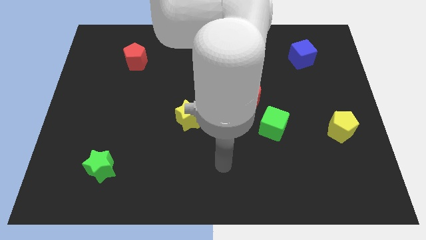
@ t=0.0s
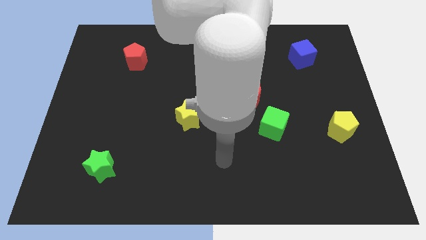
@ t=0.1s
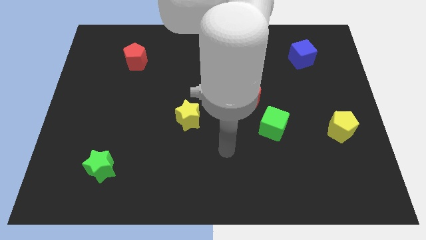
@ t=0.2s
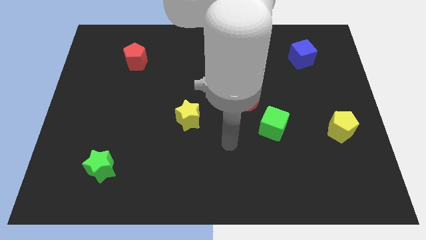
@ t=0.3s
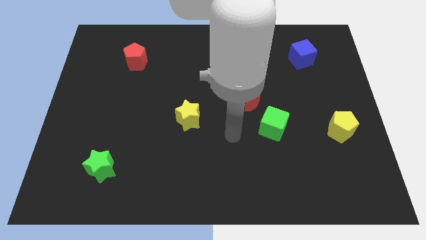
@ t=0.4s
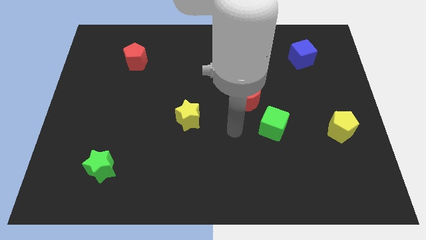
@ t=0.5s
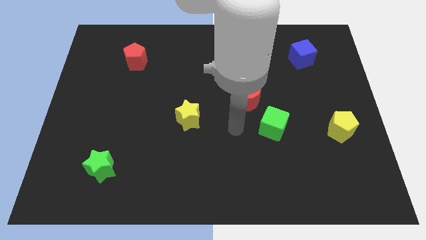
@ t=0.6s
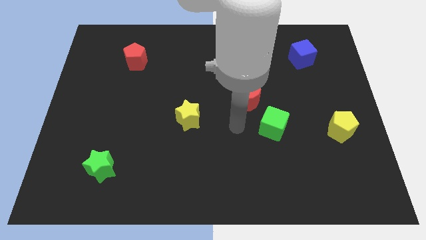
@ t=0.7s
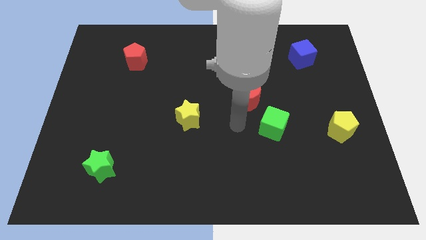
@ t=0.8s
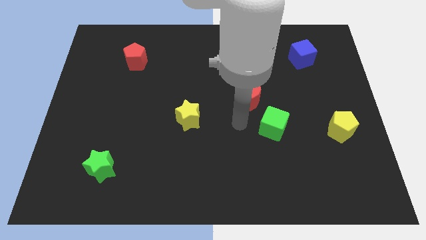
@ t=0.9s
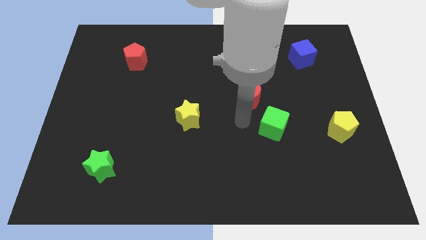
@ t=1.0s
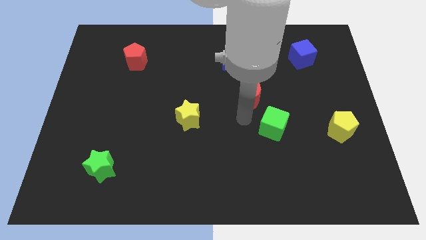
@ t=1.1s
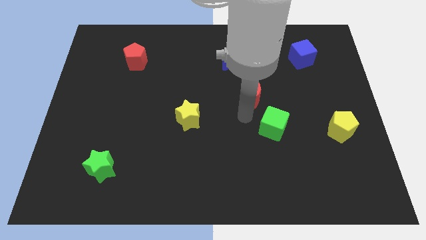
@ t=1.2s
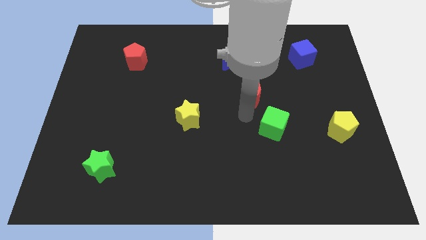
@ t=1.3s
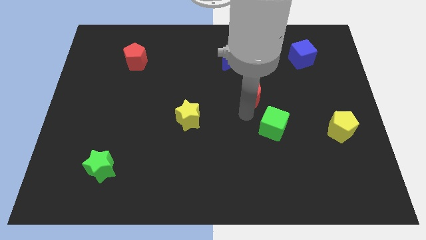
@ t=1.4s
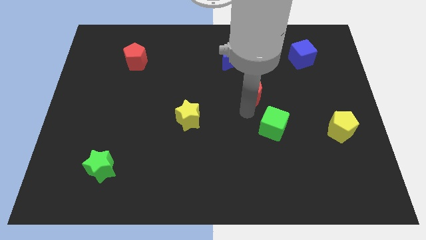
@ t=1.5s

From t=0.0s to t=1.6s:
tap the bottom side of the red crescent

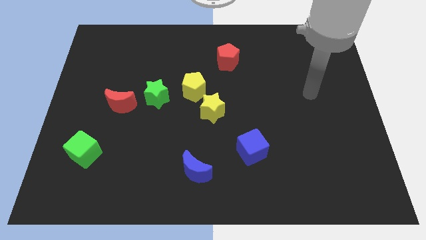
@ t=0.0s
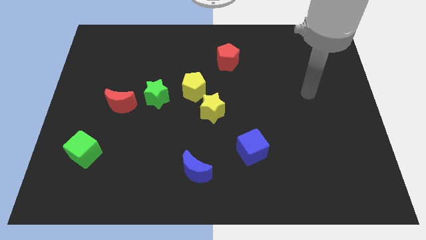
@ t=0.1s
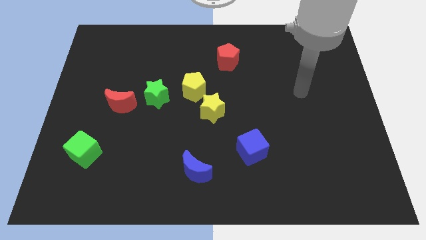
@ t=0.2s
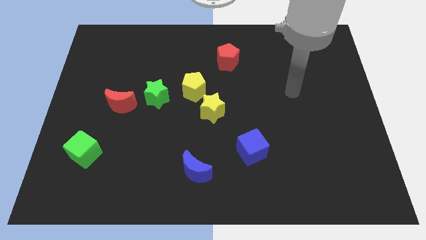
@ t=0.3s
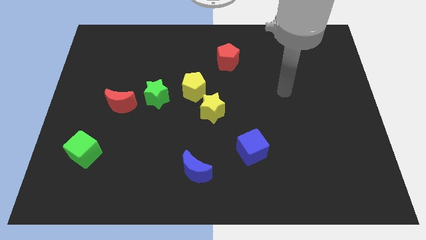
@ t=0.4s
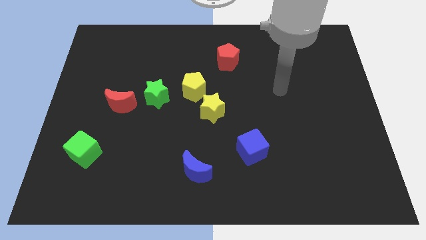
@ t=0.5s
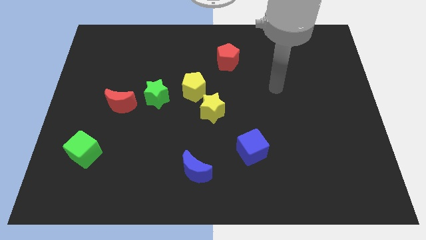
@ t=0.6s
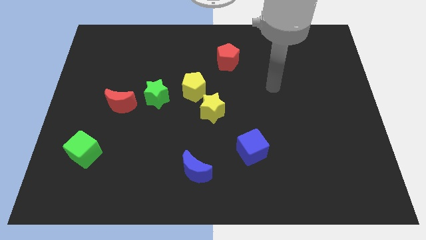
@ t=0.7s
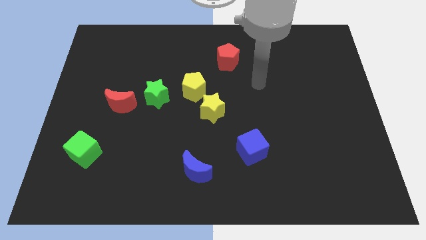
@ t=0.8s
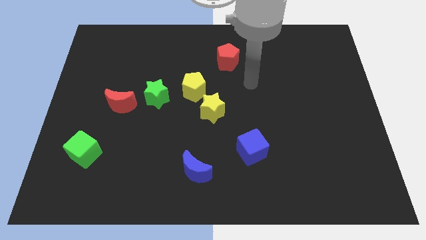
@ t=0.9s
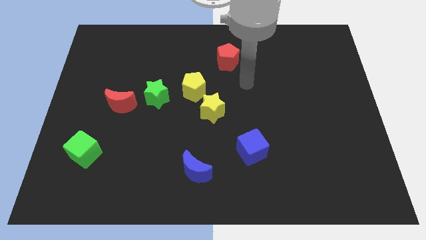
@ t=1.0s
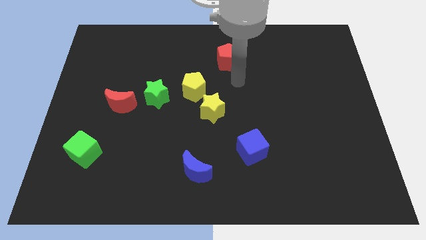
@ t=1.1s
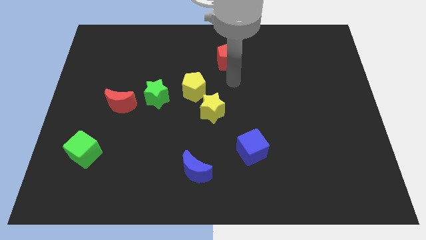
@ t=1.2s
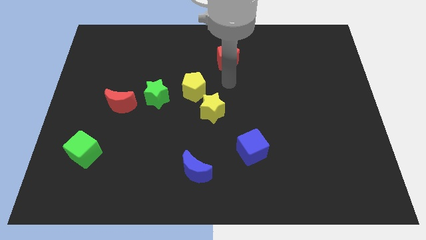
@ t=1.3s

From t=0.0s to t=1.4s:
move your arm to the bottom side of the red pentagon

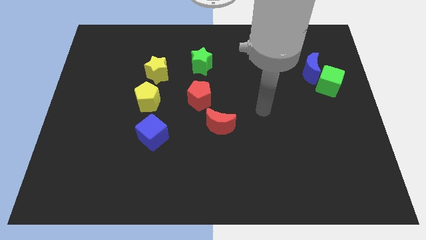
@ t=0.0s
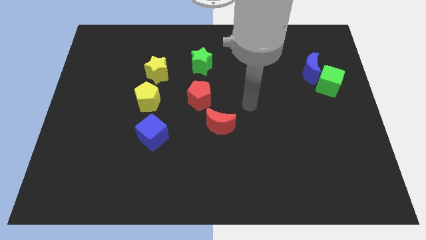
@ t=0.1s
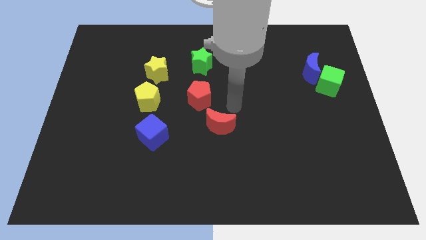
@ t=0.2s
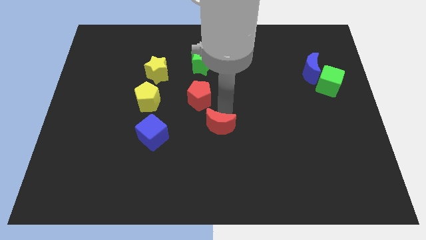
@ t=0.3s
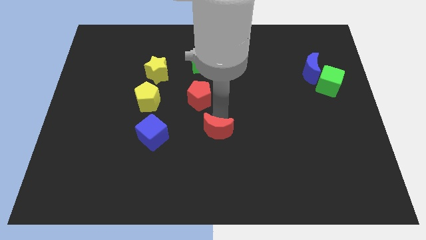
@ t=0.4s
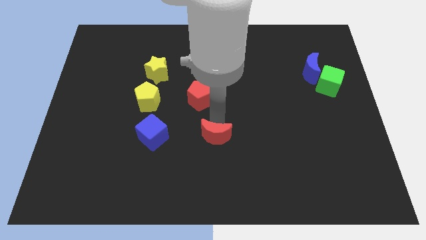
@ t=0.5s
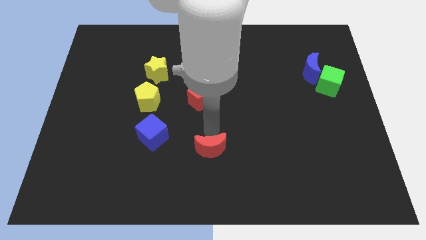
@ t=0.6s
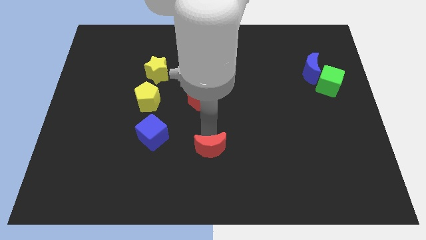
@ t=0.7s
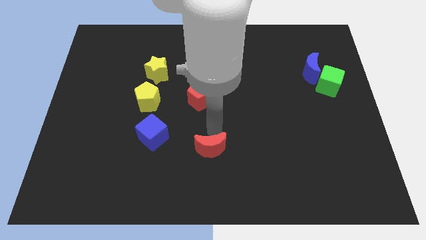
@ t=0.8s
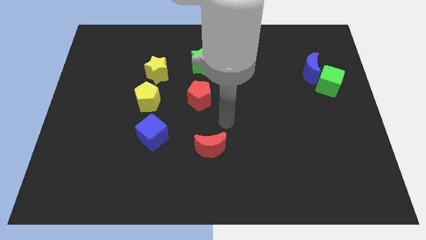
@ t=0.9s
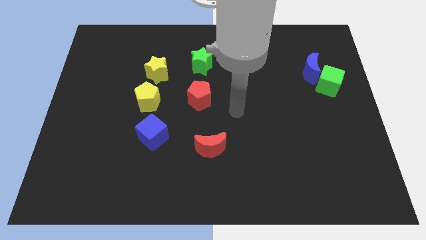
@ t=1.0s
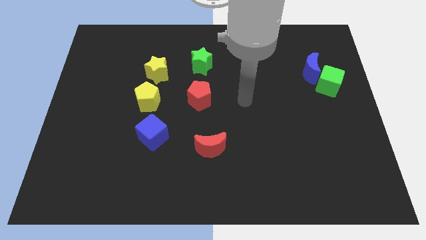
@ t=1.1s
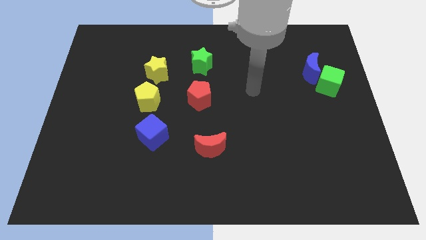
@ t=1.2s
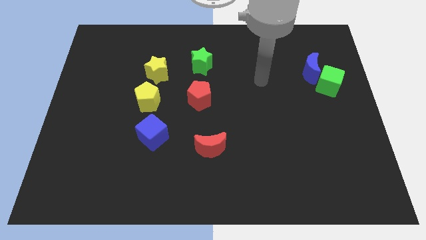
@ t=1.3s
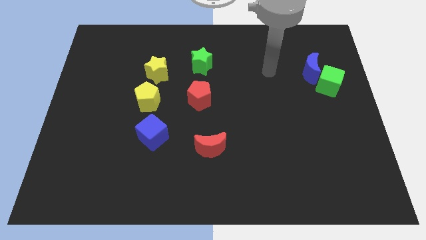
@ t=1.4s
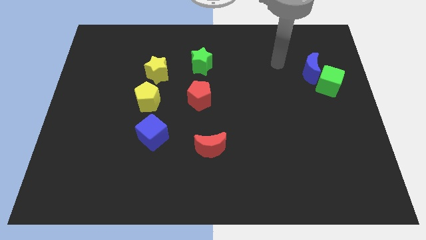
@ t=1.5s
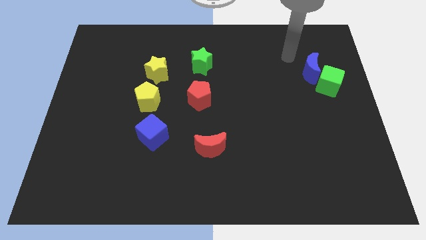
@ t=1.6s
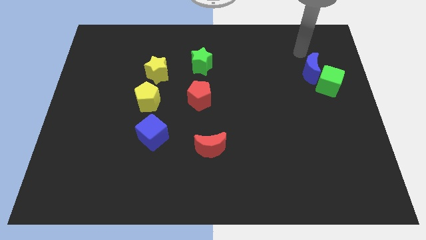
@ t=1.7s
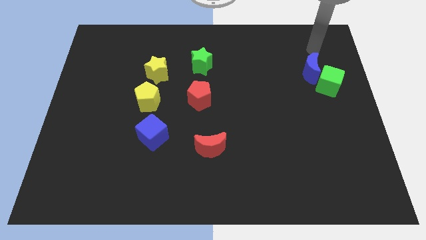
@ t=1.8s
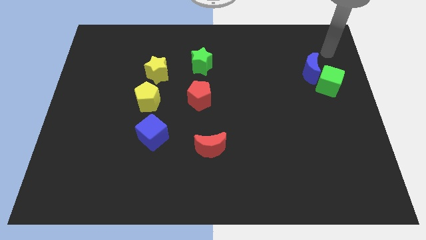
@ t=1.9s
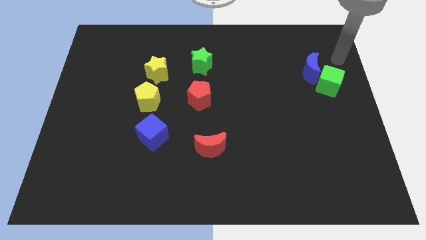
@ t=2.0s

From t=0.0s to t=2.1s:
push the red moon towards the red pentagon

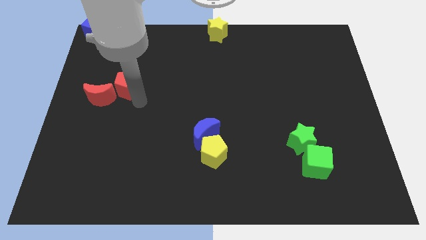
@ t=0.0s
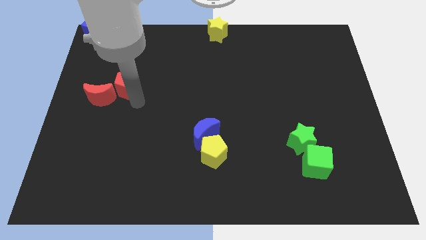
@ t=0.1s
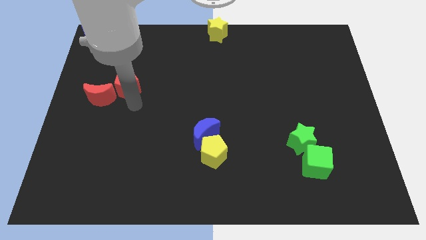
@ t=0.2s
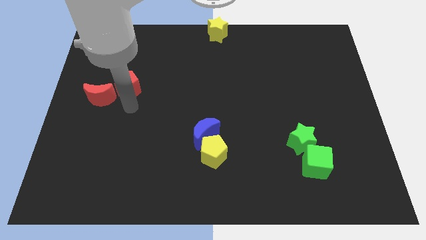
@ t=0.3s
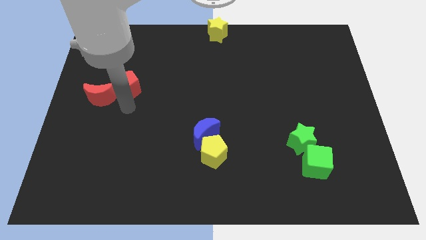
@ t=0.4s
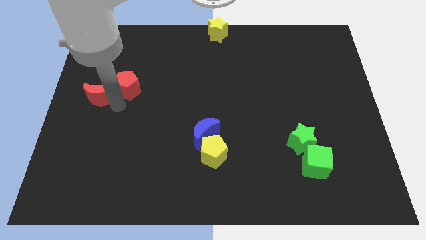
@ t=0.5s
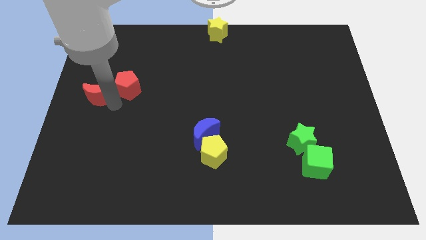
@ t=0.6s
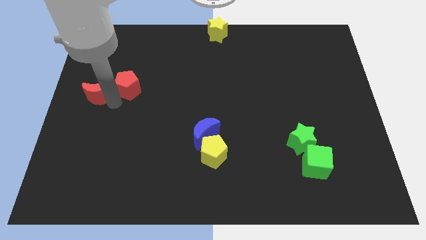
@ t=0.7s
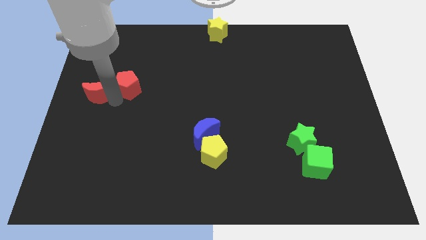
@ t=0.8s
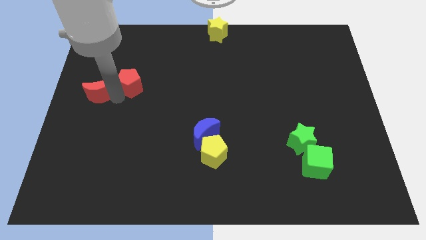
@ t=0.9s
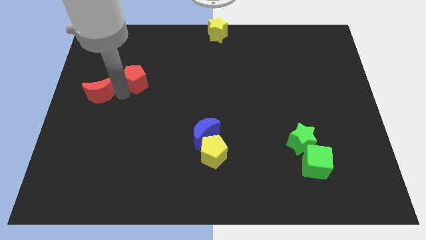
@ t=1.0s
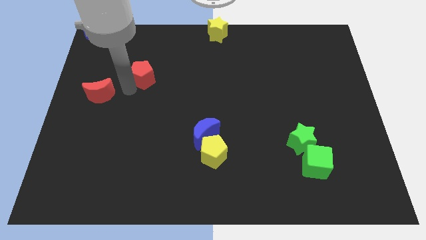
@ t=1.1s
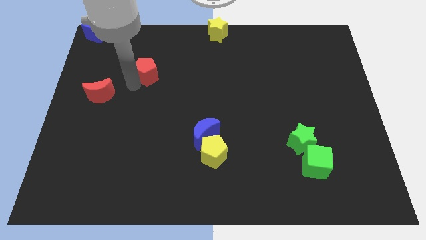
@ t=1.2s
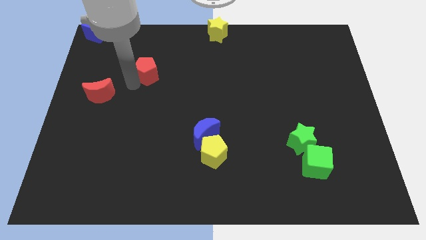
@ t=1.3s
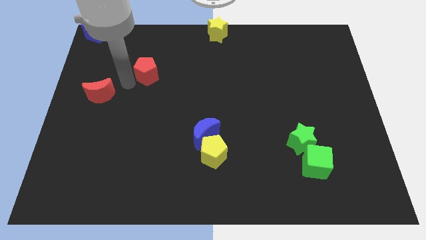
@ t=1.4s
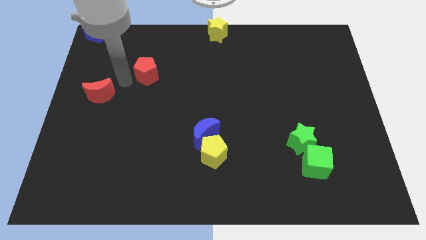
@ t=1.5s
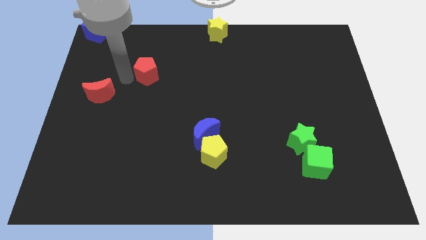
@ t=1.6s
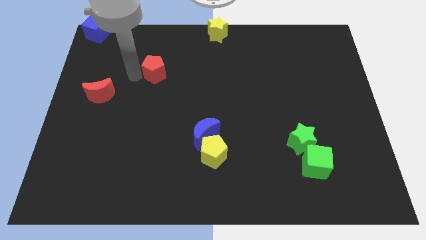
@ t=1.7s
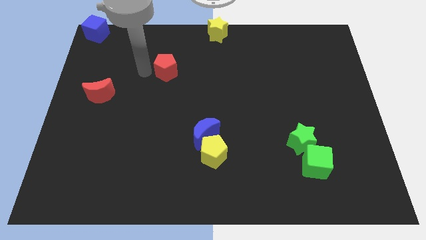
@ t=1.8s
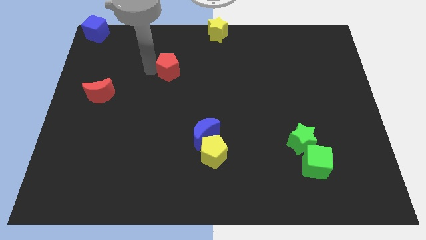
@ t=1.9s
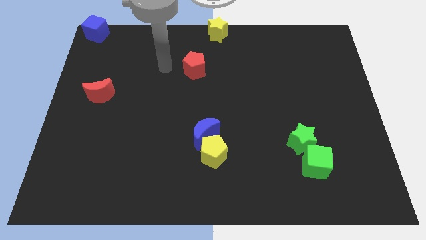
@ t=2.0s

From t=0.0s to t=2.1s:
separate the red pentagon from the red crescent

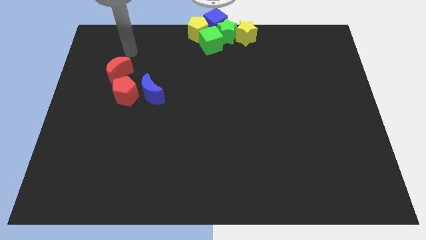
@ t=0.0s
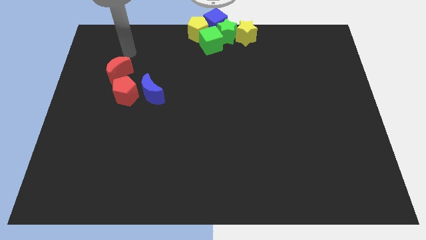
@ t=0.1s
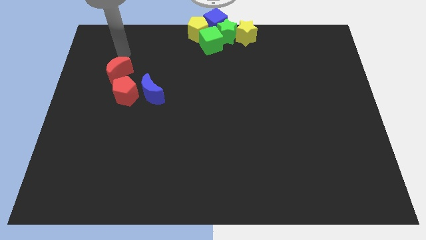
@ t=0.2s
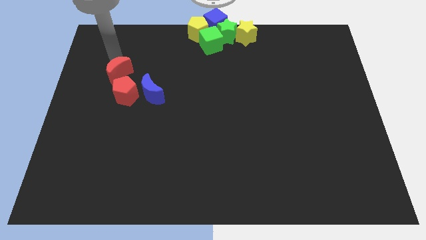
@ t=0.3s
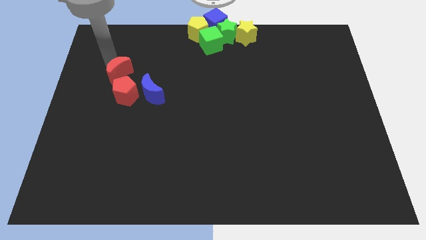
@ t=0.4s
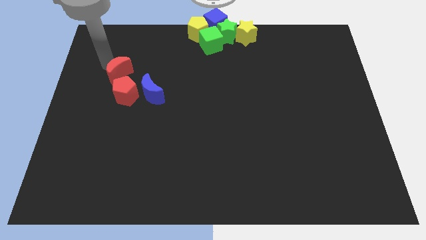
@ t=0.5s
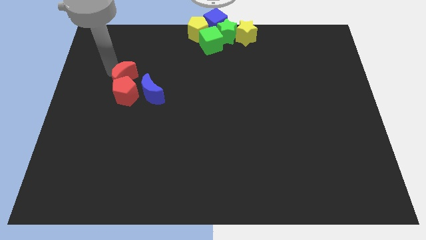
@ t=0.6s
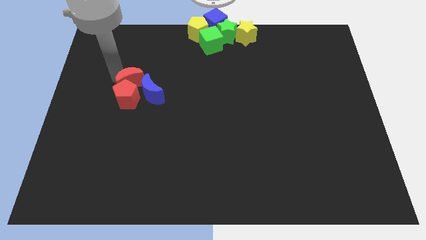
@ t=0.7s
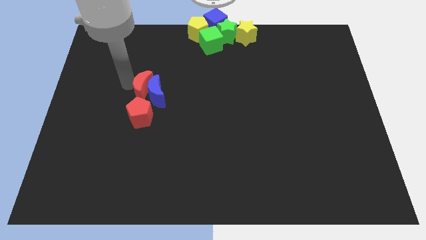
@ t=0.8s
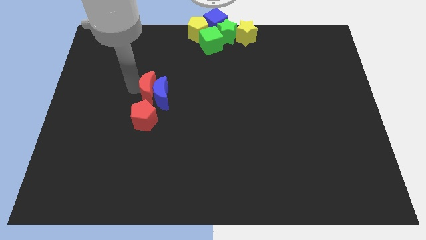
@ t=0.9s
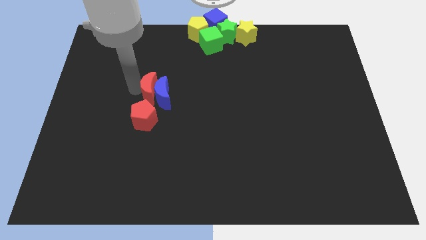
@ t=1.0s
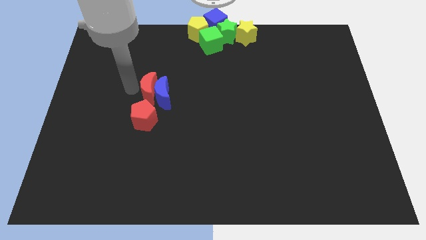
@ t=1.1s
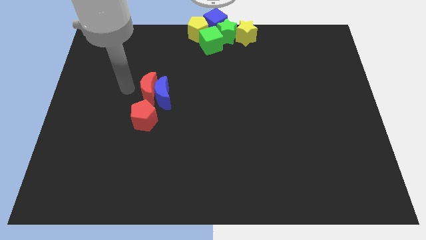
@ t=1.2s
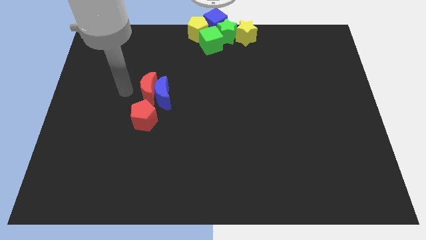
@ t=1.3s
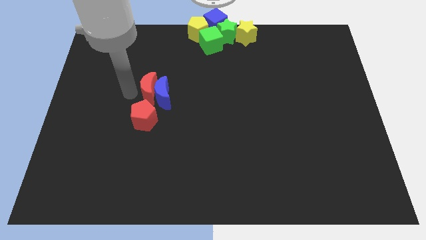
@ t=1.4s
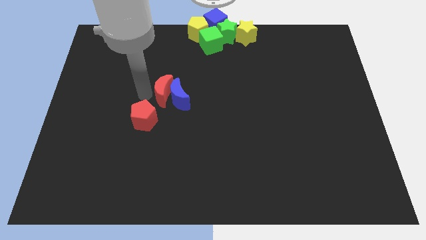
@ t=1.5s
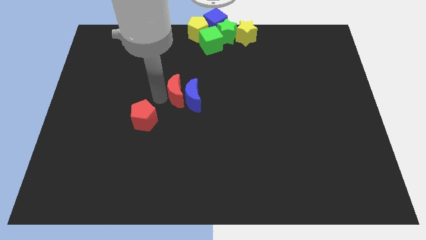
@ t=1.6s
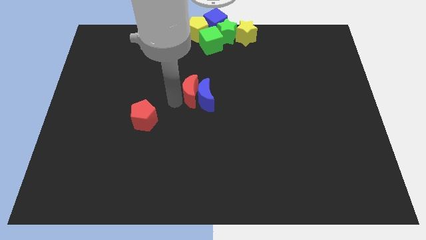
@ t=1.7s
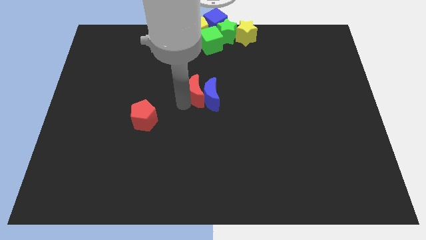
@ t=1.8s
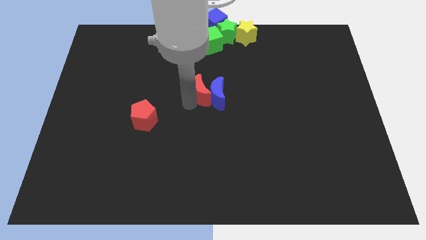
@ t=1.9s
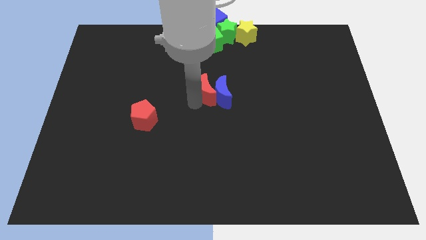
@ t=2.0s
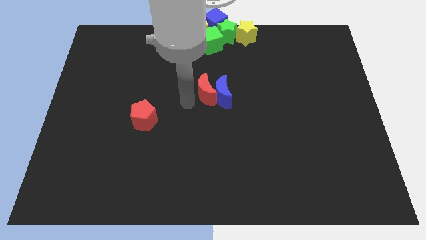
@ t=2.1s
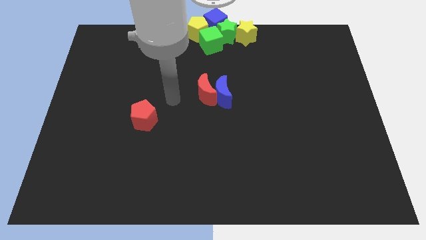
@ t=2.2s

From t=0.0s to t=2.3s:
drag blue and red moon towards middle of the board
